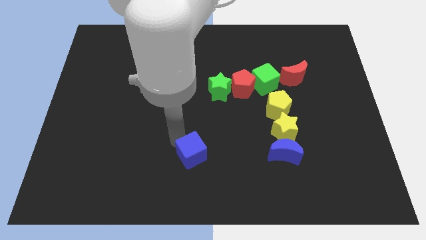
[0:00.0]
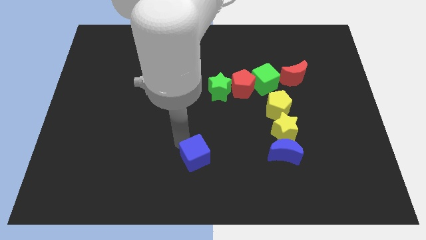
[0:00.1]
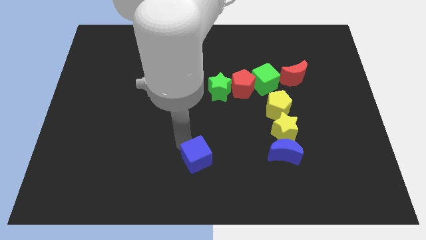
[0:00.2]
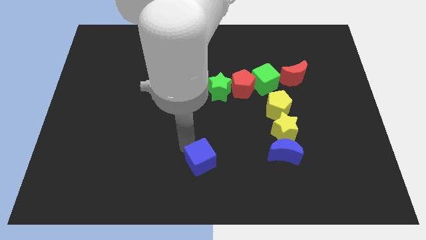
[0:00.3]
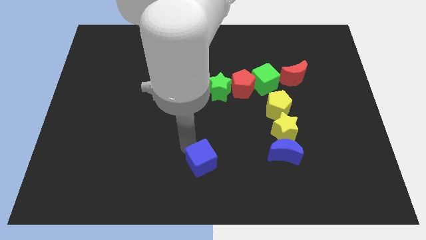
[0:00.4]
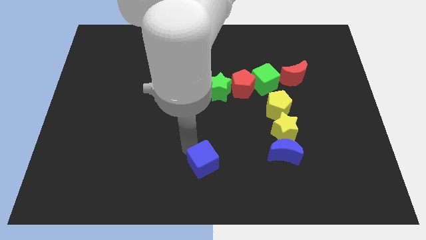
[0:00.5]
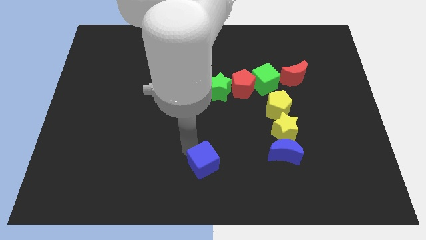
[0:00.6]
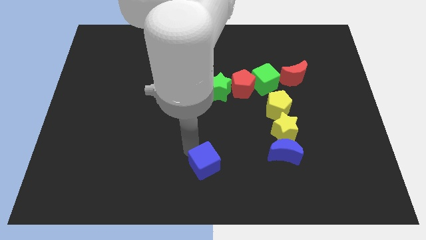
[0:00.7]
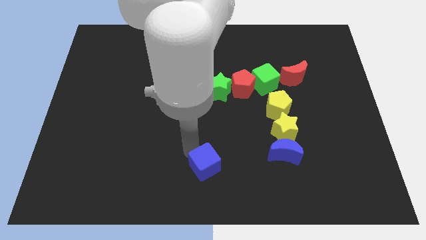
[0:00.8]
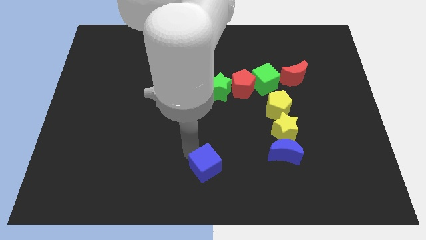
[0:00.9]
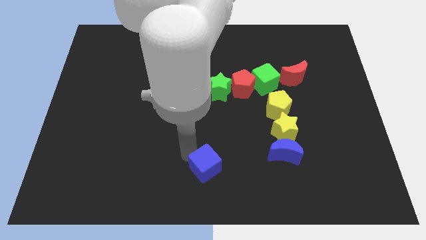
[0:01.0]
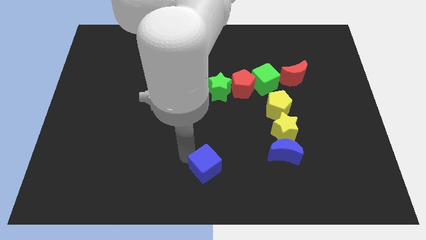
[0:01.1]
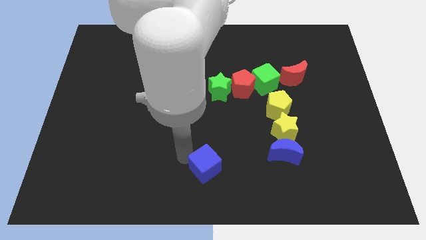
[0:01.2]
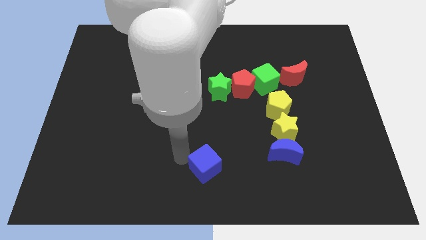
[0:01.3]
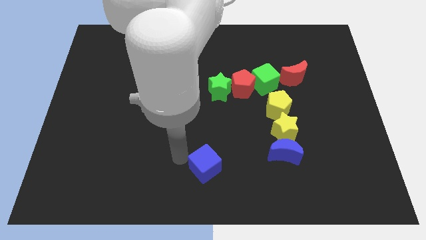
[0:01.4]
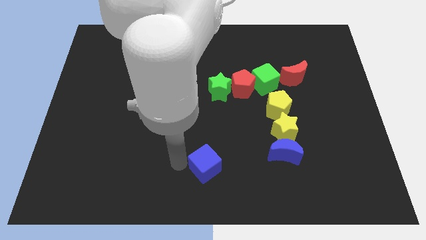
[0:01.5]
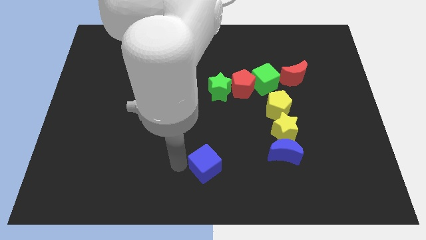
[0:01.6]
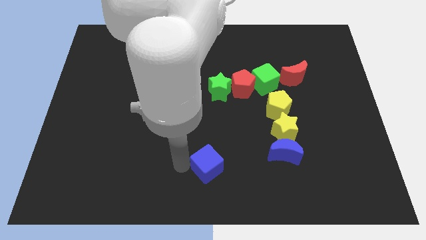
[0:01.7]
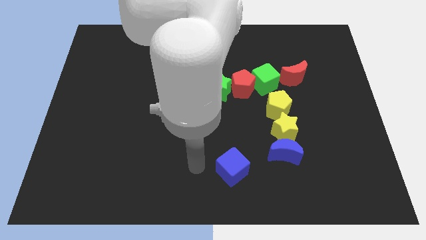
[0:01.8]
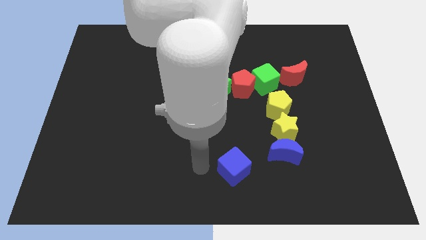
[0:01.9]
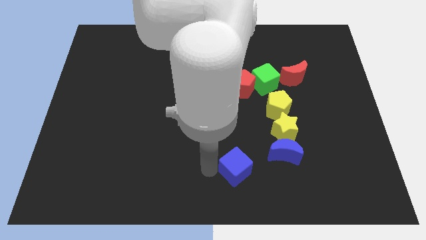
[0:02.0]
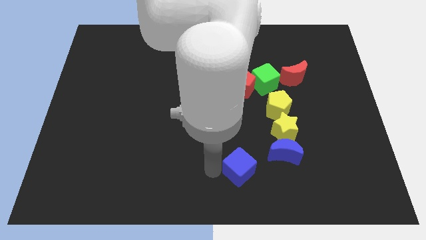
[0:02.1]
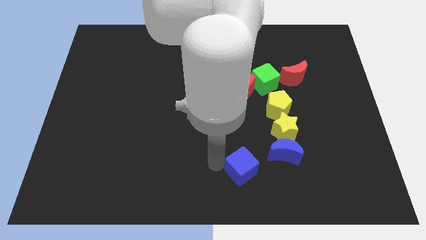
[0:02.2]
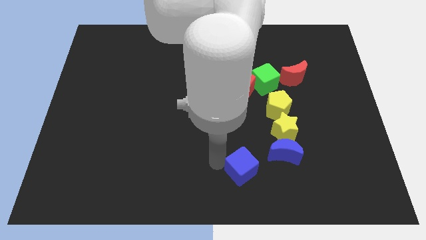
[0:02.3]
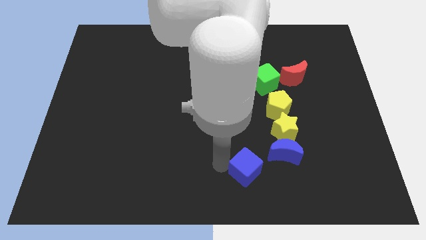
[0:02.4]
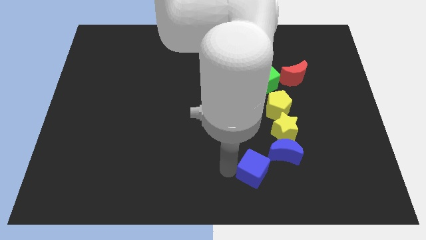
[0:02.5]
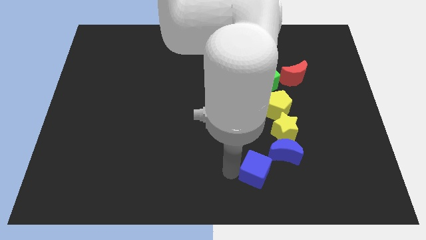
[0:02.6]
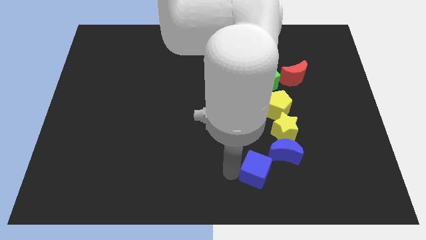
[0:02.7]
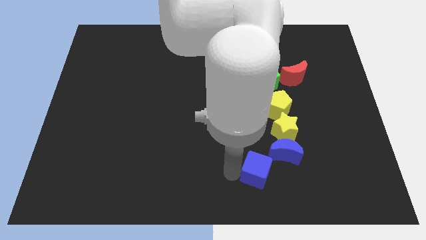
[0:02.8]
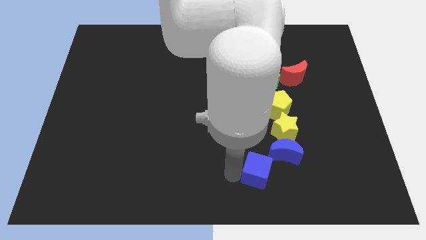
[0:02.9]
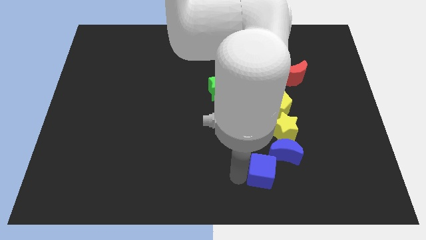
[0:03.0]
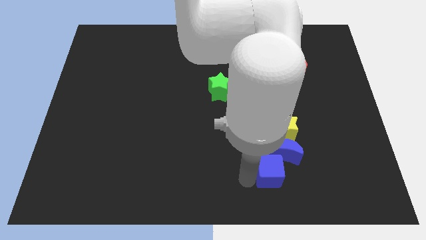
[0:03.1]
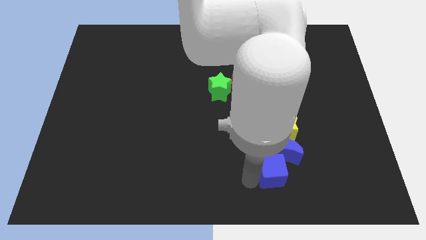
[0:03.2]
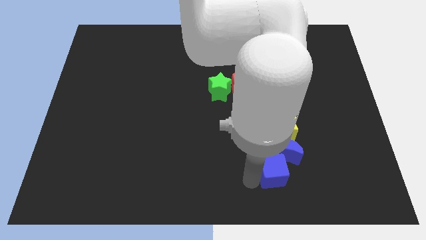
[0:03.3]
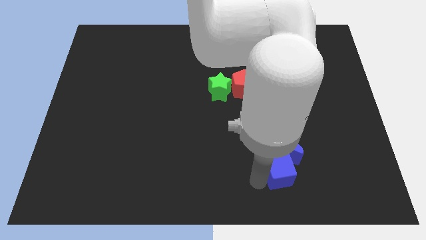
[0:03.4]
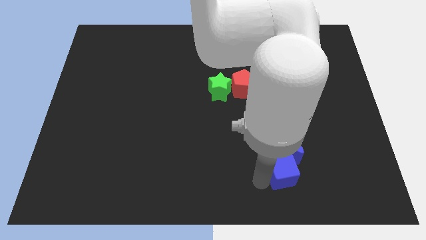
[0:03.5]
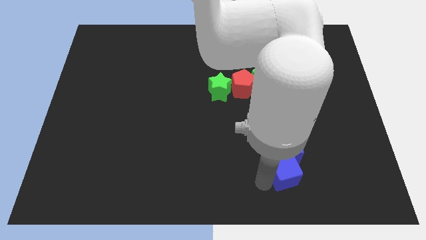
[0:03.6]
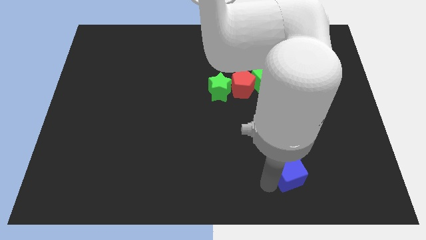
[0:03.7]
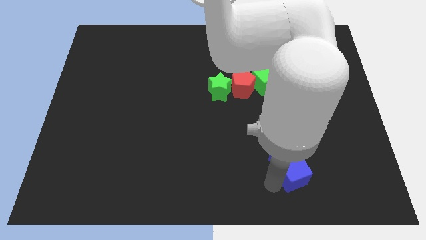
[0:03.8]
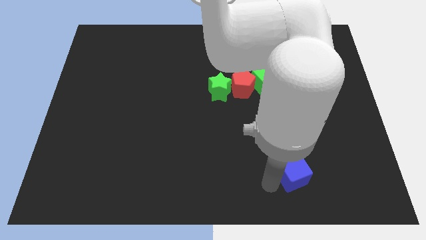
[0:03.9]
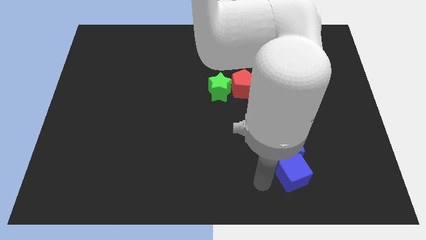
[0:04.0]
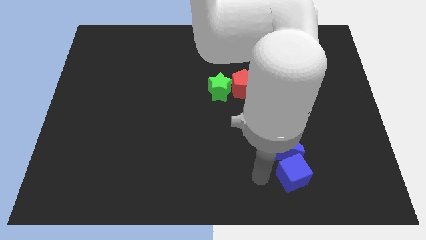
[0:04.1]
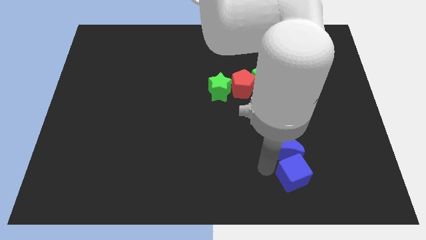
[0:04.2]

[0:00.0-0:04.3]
place the blue cube below the blue crescent

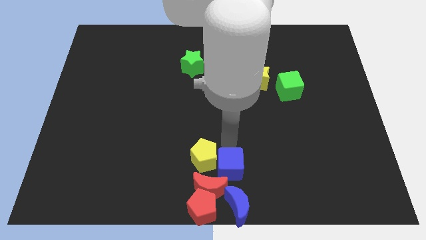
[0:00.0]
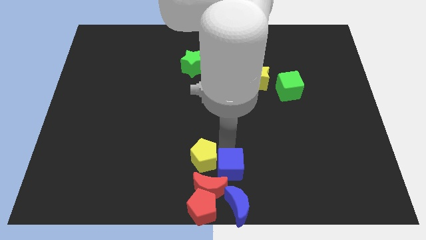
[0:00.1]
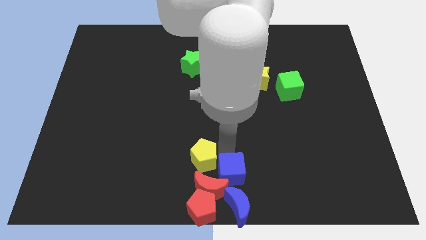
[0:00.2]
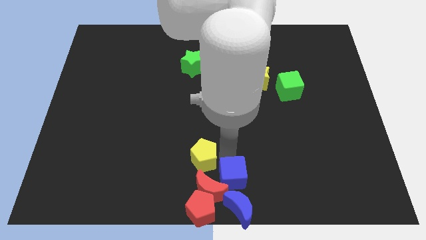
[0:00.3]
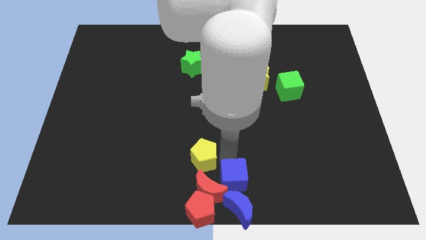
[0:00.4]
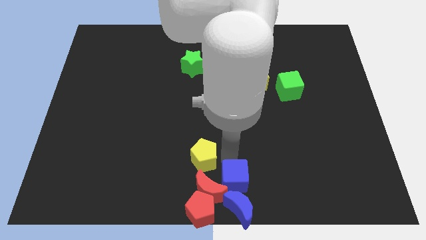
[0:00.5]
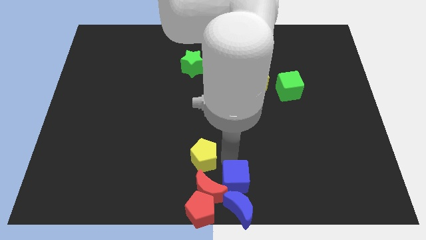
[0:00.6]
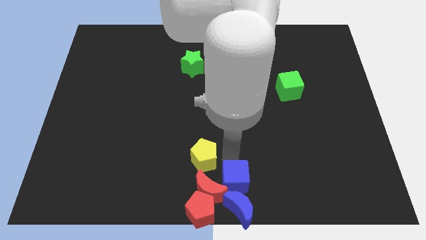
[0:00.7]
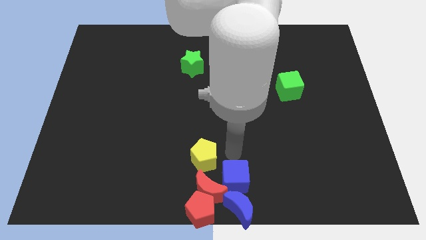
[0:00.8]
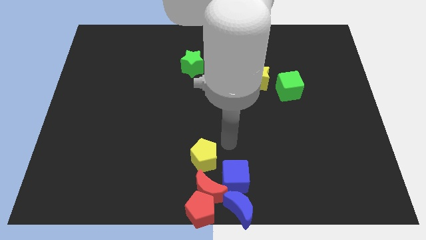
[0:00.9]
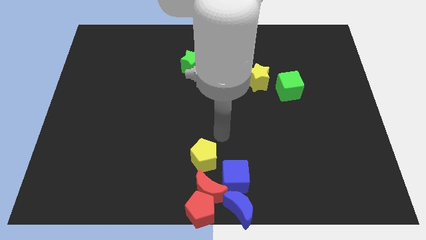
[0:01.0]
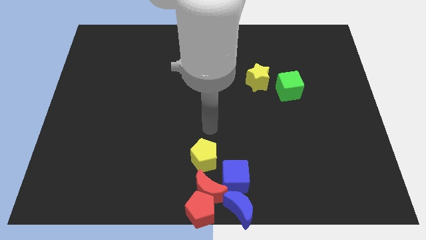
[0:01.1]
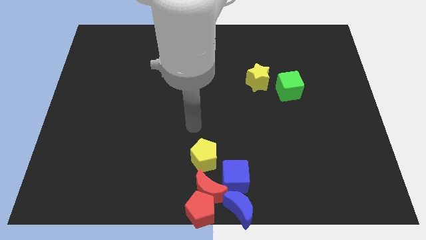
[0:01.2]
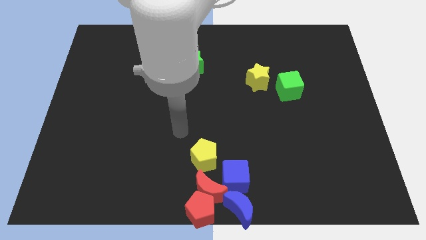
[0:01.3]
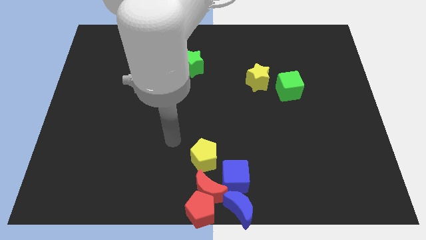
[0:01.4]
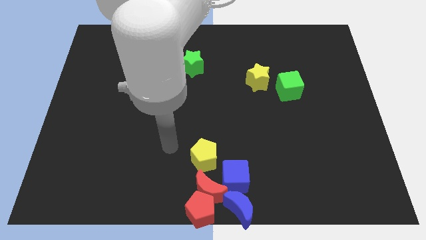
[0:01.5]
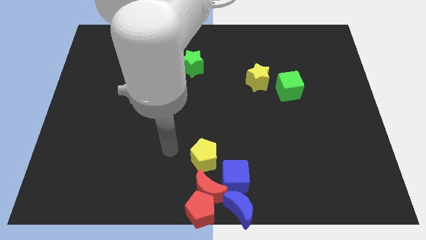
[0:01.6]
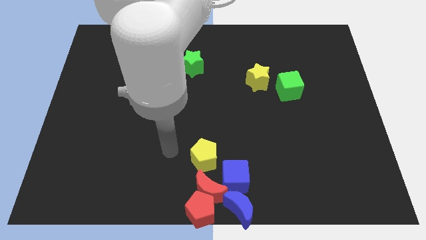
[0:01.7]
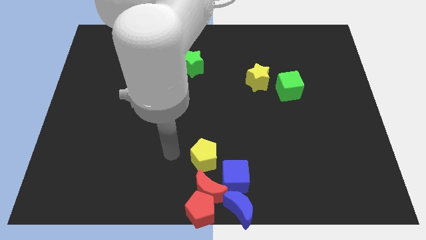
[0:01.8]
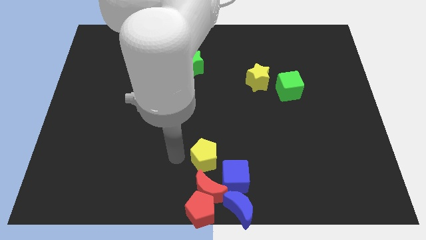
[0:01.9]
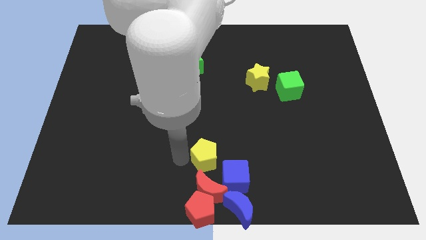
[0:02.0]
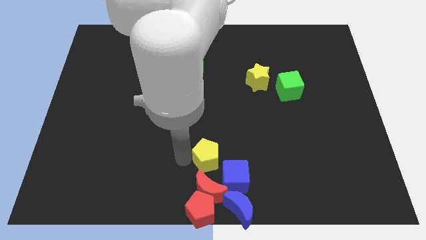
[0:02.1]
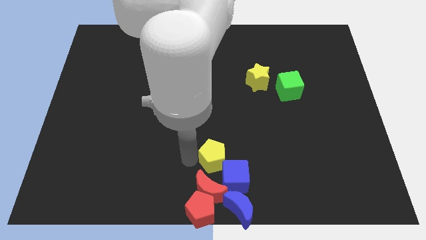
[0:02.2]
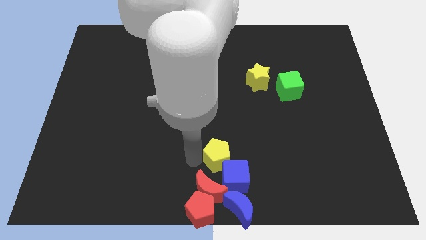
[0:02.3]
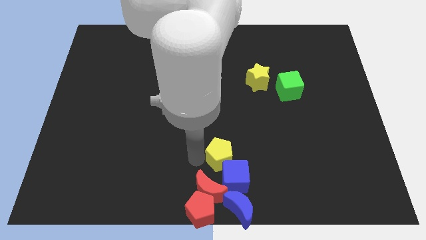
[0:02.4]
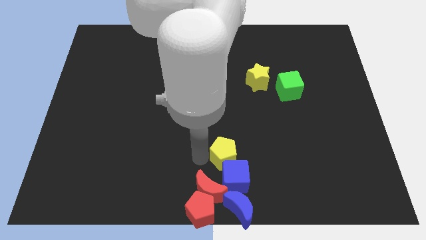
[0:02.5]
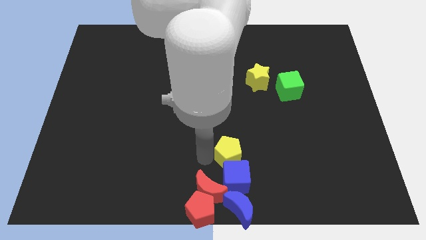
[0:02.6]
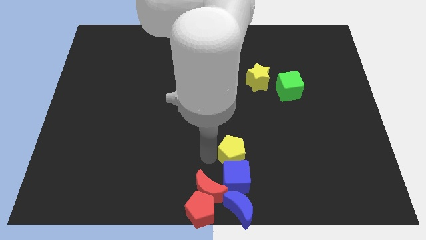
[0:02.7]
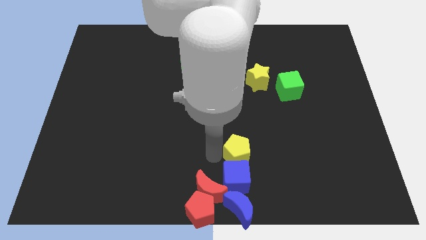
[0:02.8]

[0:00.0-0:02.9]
place the blue cube and yellow pentagon in a vertical line at the top of the blue moon

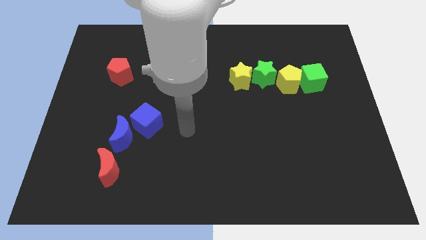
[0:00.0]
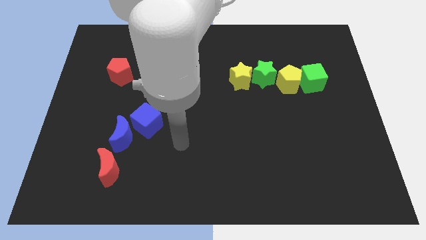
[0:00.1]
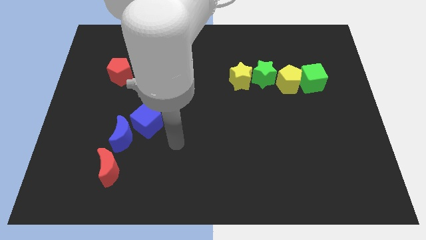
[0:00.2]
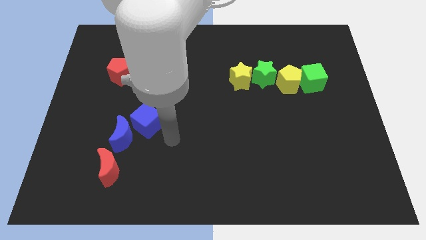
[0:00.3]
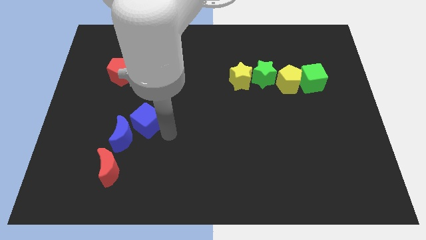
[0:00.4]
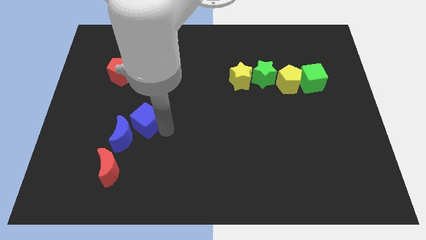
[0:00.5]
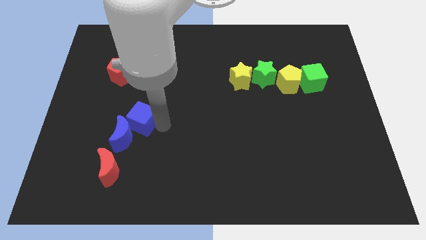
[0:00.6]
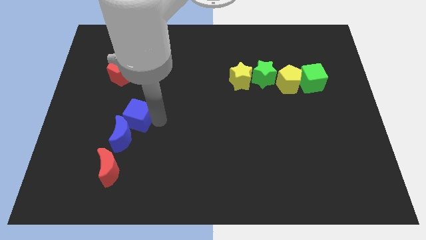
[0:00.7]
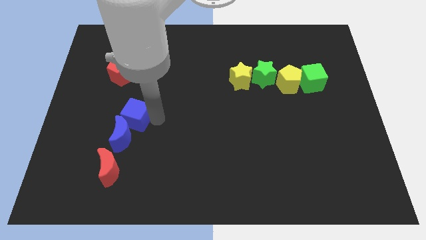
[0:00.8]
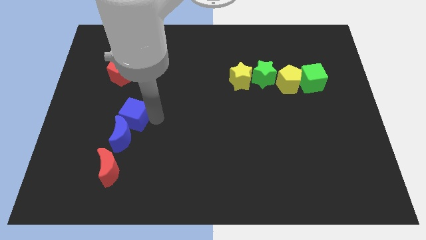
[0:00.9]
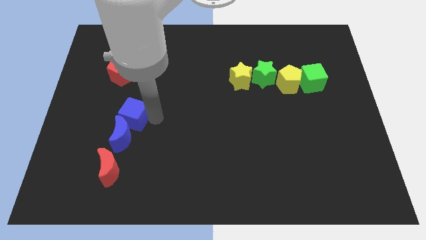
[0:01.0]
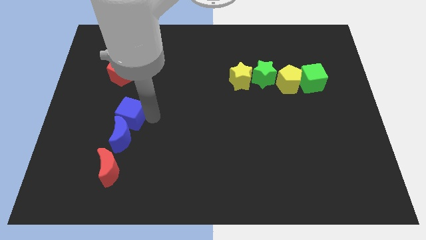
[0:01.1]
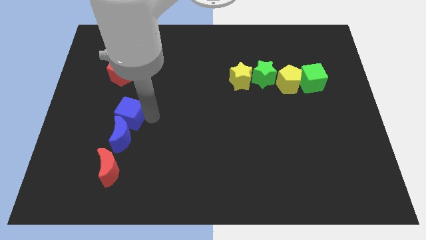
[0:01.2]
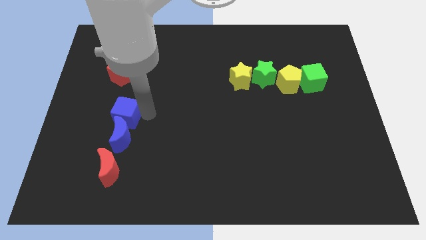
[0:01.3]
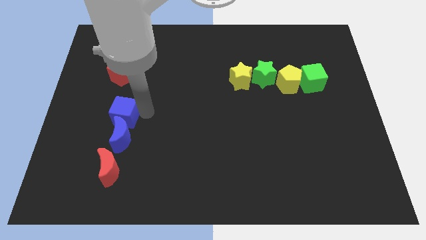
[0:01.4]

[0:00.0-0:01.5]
place the blue cube on the top of the blue crescent

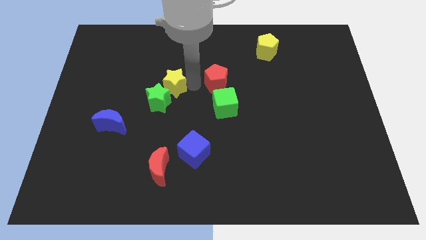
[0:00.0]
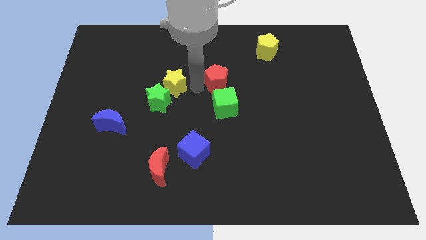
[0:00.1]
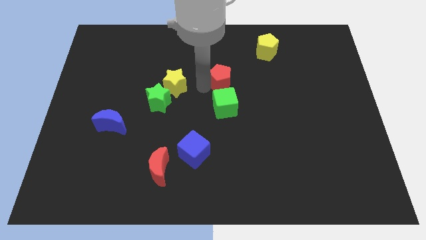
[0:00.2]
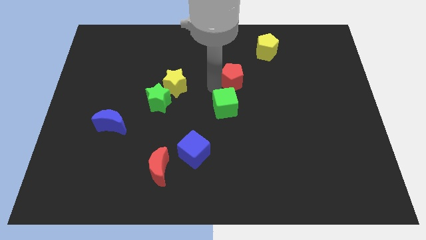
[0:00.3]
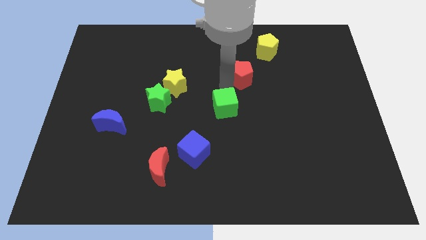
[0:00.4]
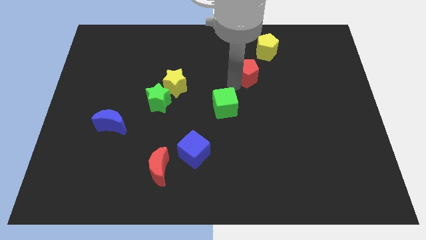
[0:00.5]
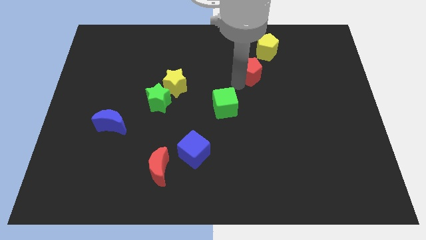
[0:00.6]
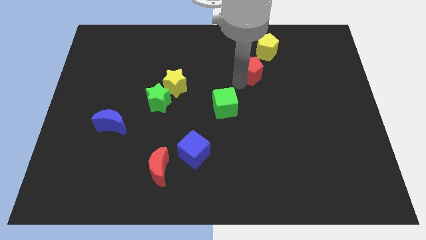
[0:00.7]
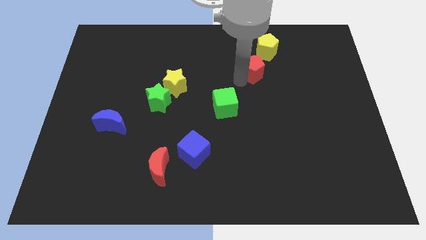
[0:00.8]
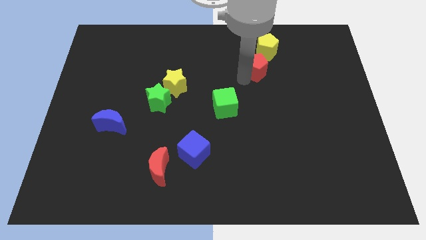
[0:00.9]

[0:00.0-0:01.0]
place the red pentagon in between the yellow pentagon and green cube
